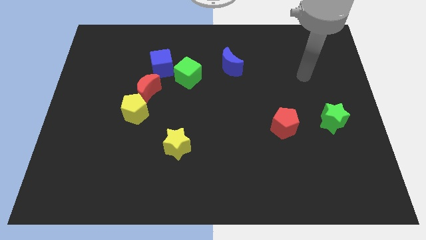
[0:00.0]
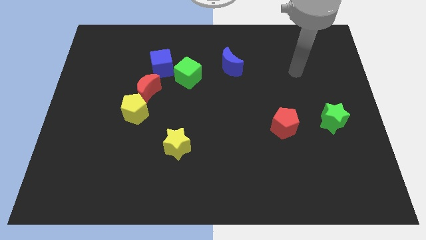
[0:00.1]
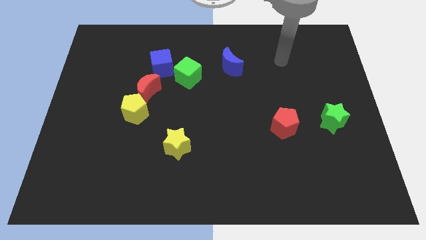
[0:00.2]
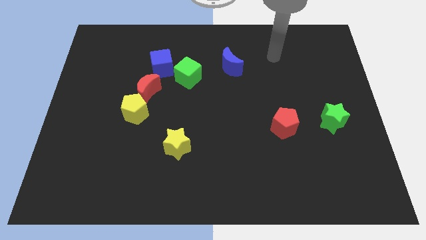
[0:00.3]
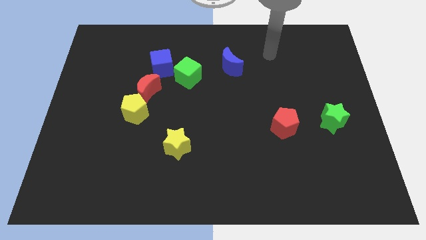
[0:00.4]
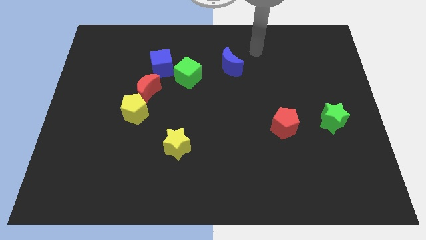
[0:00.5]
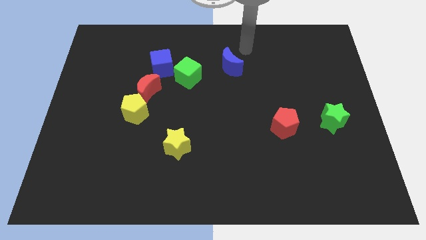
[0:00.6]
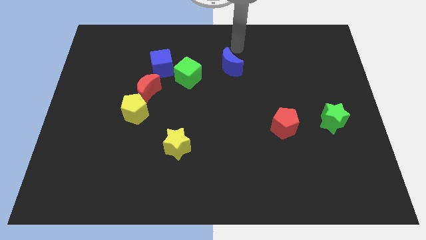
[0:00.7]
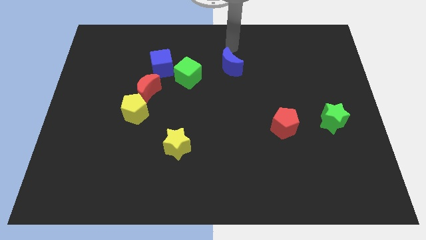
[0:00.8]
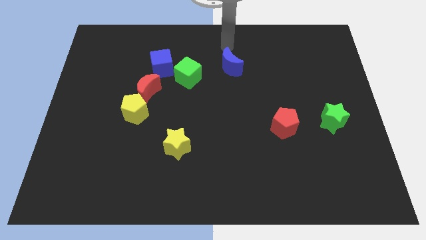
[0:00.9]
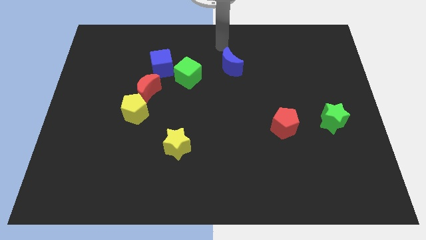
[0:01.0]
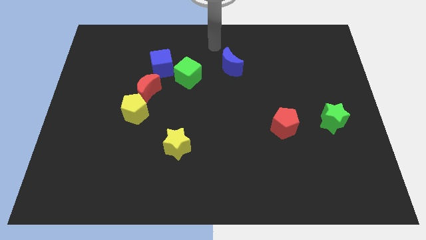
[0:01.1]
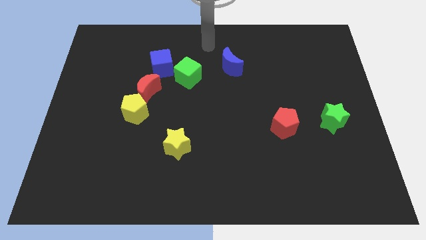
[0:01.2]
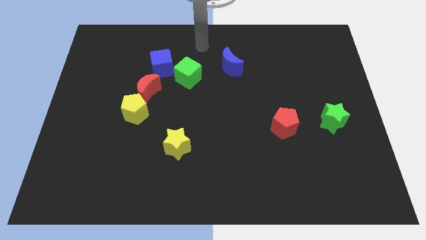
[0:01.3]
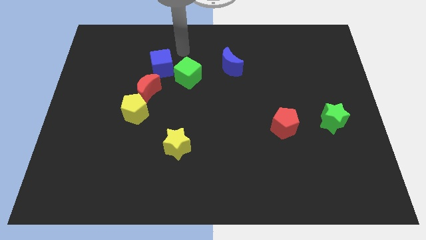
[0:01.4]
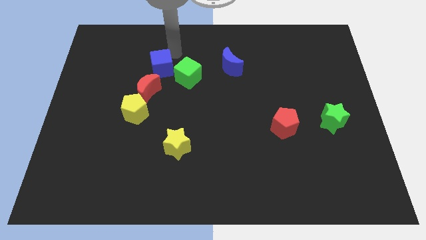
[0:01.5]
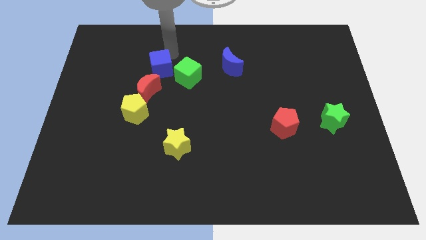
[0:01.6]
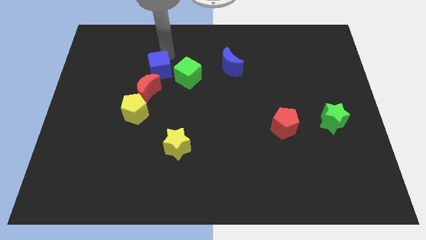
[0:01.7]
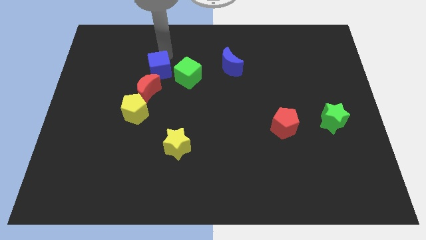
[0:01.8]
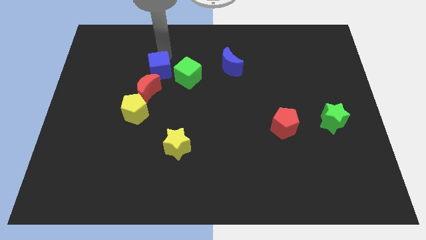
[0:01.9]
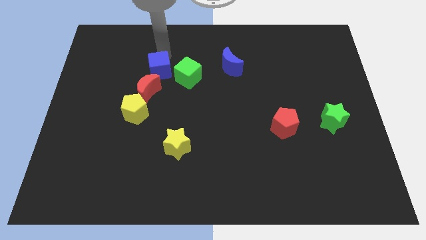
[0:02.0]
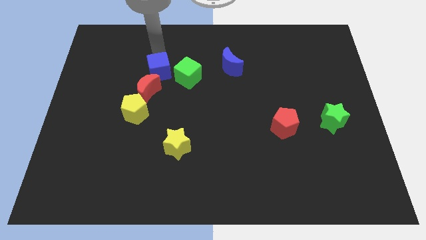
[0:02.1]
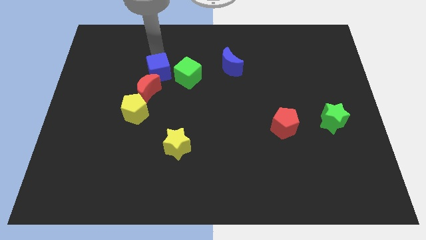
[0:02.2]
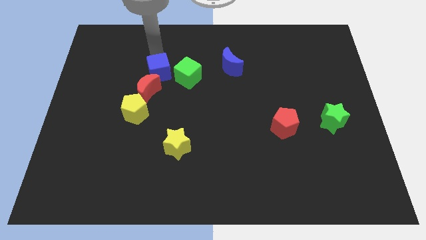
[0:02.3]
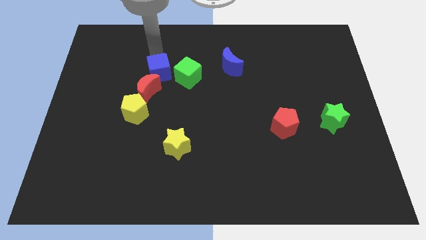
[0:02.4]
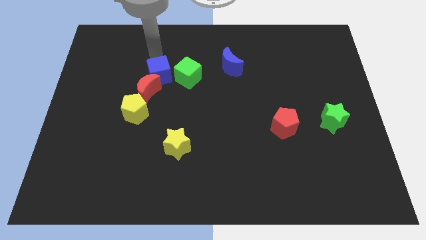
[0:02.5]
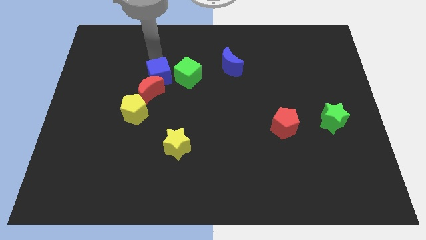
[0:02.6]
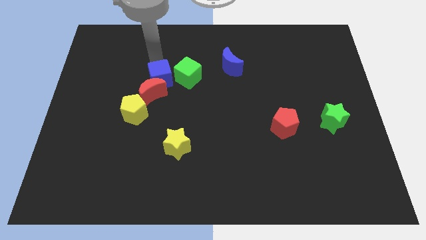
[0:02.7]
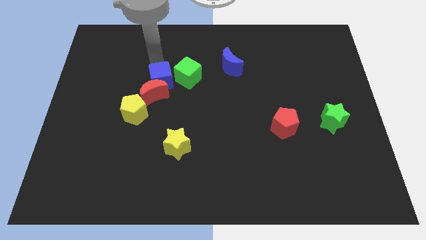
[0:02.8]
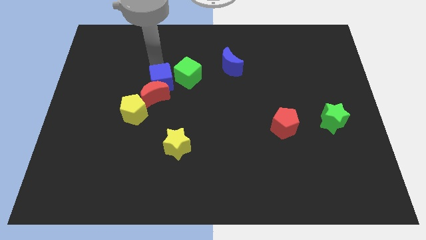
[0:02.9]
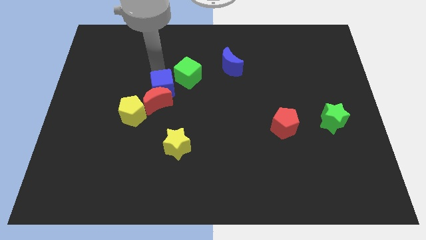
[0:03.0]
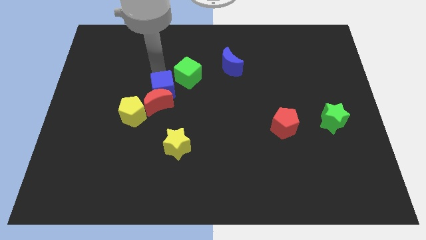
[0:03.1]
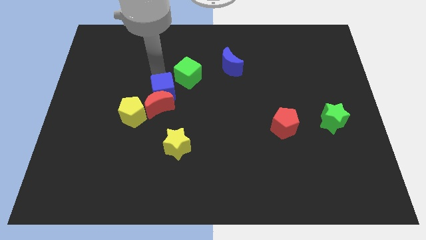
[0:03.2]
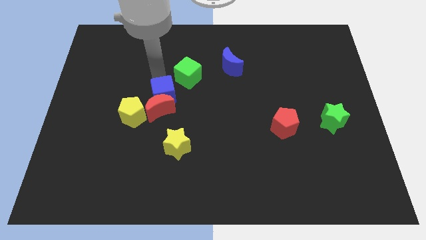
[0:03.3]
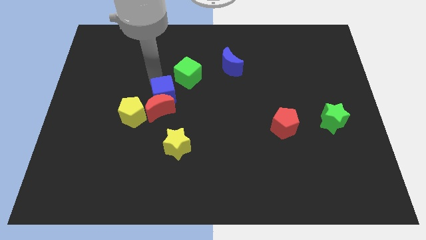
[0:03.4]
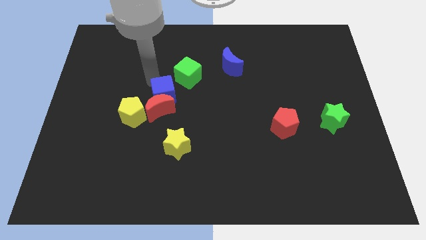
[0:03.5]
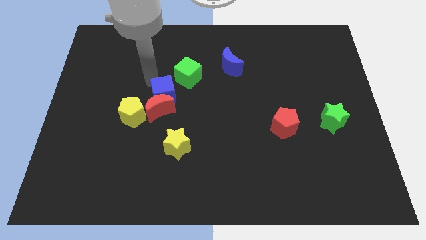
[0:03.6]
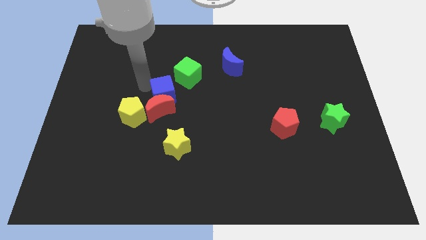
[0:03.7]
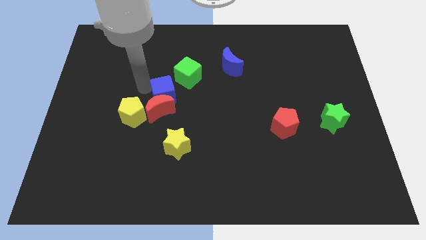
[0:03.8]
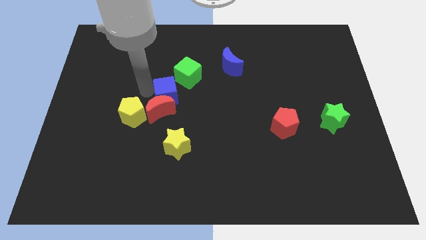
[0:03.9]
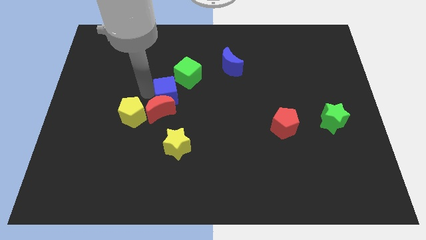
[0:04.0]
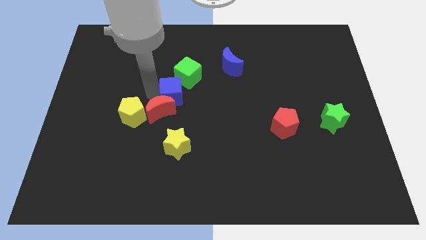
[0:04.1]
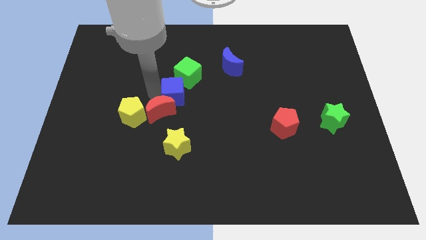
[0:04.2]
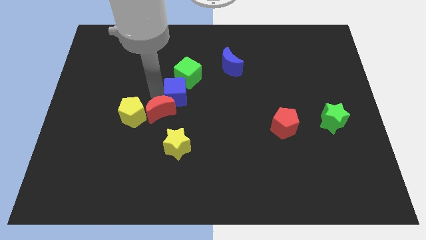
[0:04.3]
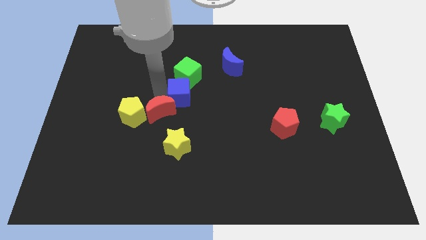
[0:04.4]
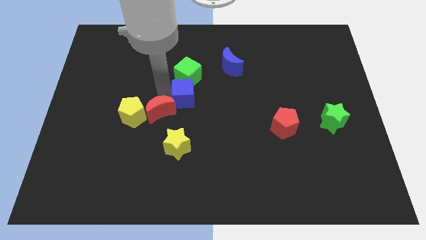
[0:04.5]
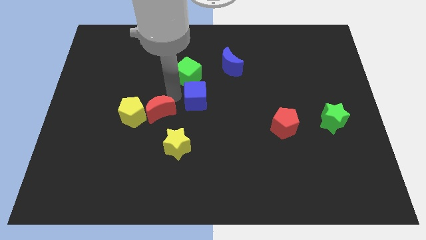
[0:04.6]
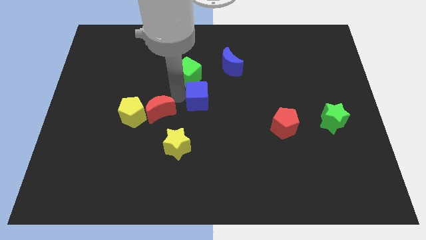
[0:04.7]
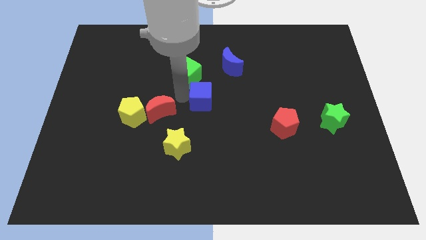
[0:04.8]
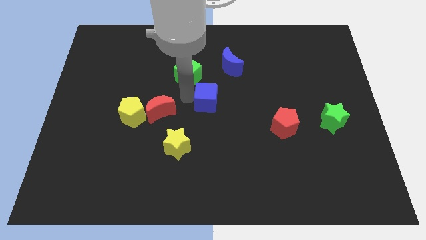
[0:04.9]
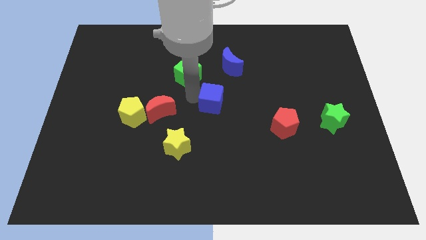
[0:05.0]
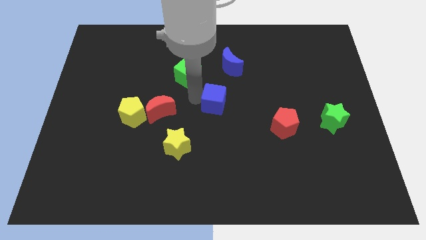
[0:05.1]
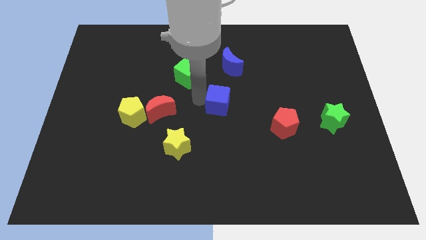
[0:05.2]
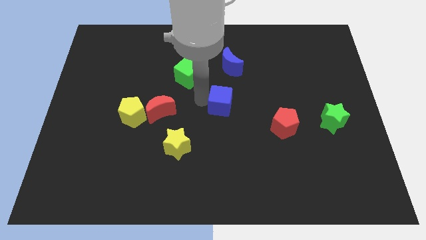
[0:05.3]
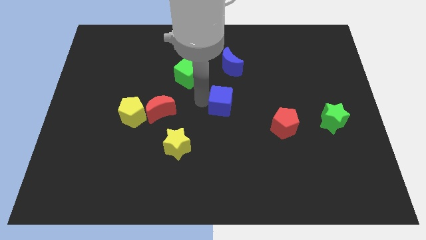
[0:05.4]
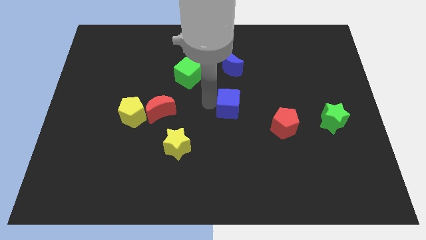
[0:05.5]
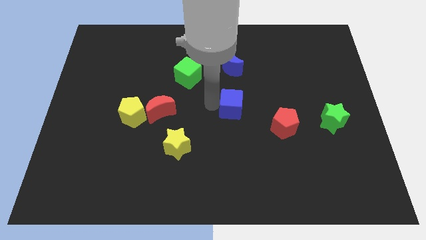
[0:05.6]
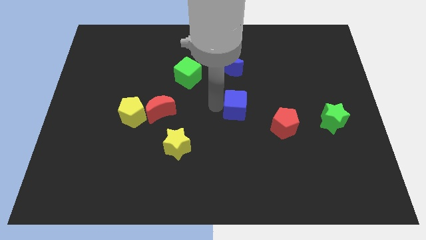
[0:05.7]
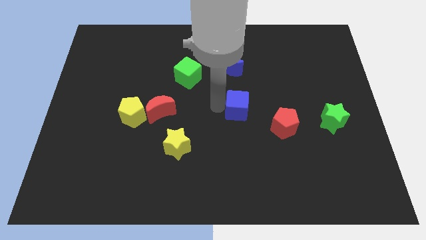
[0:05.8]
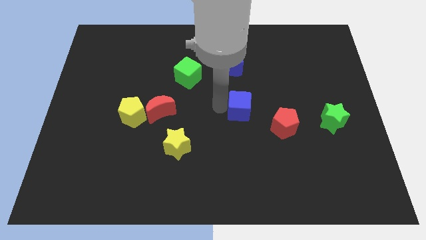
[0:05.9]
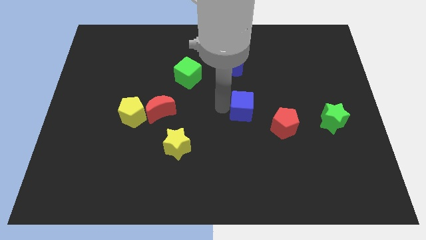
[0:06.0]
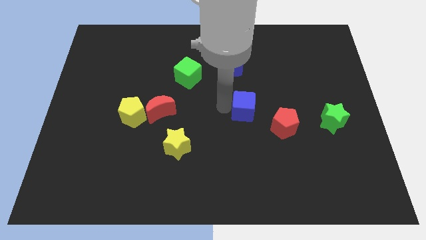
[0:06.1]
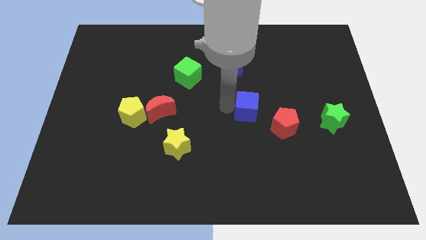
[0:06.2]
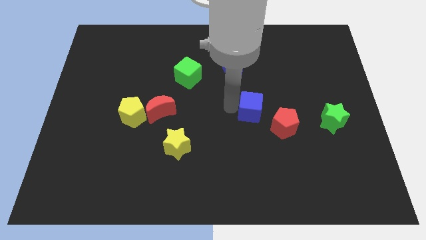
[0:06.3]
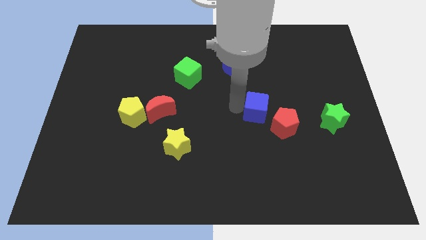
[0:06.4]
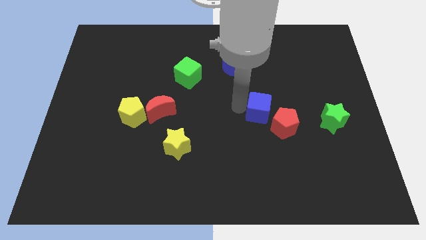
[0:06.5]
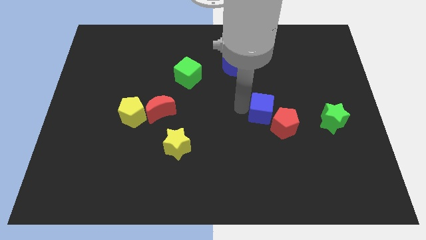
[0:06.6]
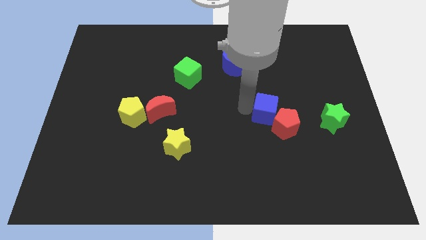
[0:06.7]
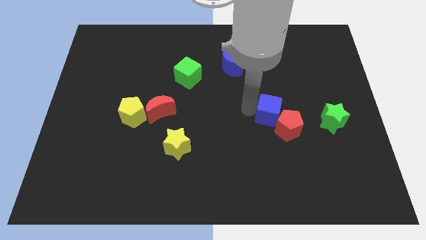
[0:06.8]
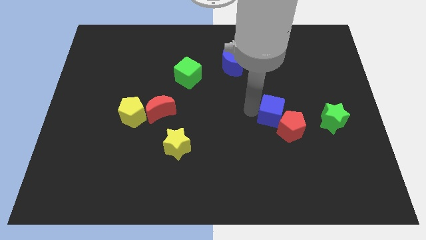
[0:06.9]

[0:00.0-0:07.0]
move the blue cube to the red pentagon

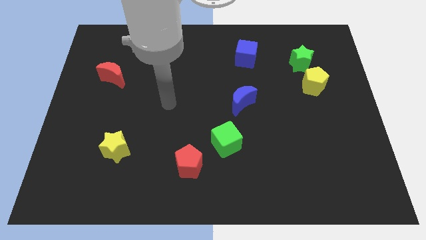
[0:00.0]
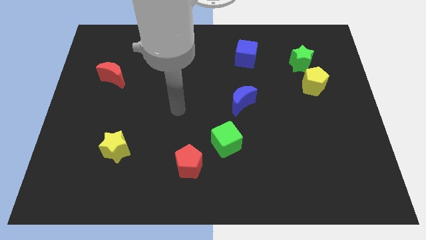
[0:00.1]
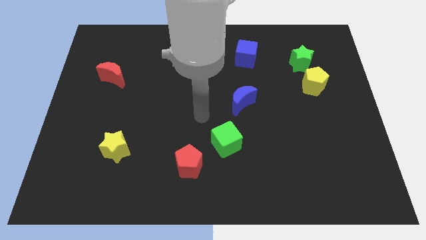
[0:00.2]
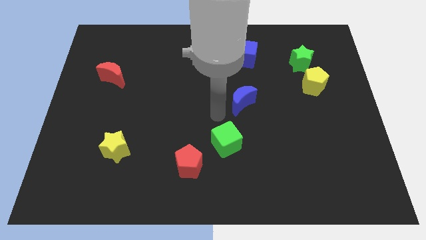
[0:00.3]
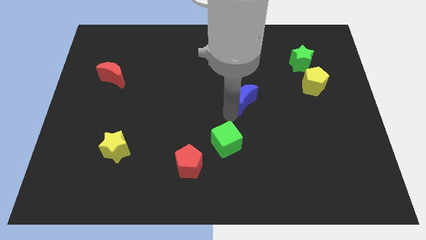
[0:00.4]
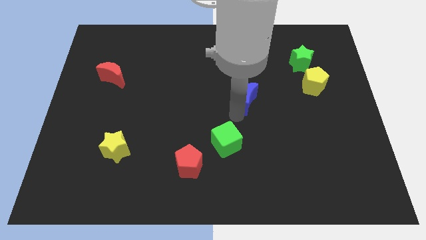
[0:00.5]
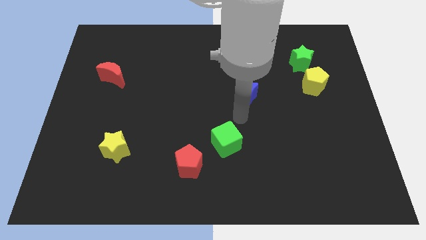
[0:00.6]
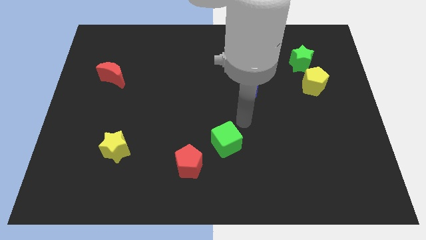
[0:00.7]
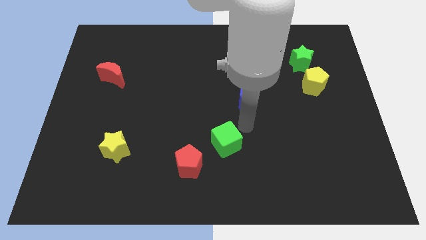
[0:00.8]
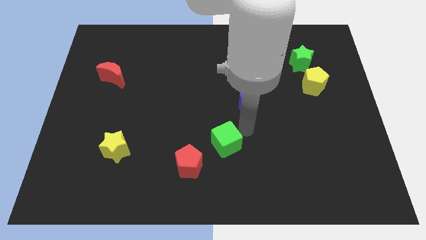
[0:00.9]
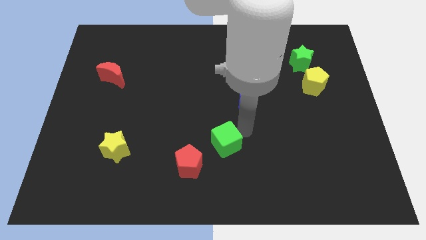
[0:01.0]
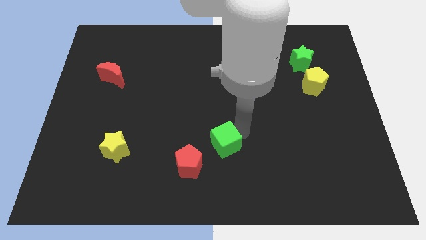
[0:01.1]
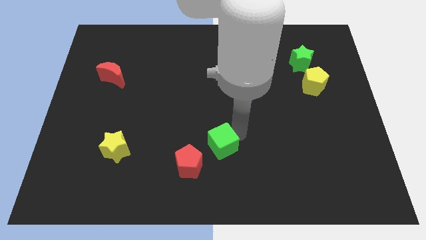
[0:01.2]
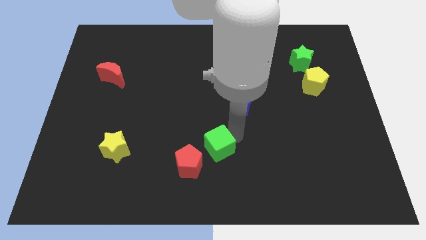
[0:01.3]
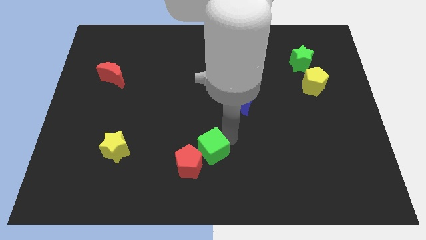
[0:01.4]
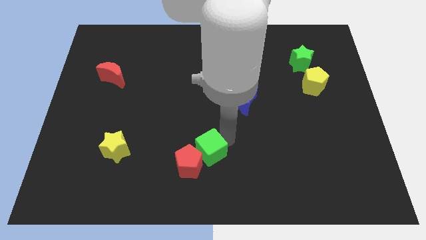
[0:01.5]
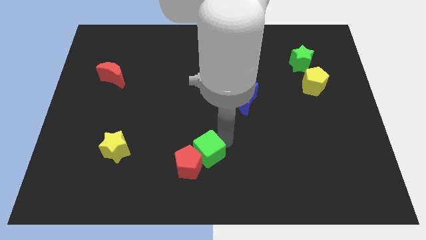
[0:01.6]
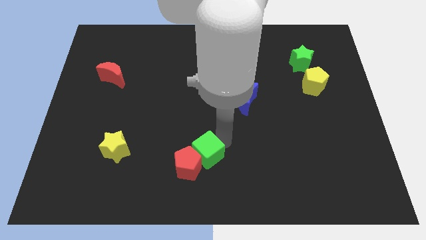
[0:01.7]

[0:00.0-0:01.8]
put the green cube next to the red pentagon
